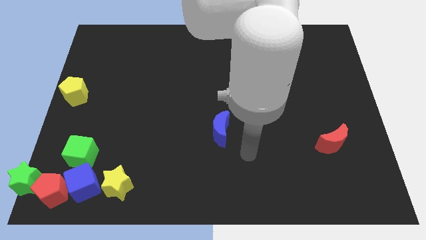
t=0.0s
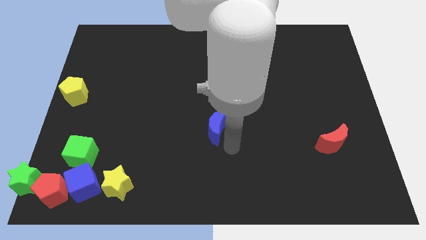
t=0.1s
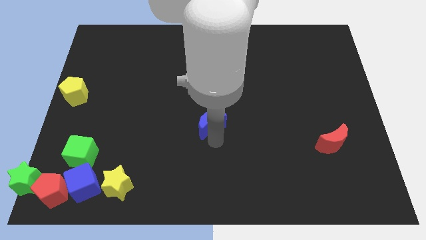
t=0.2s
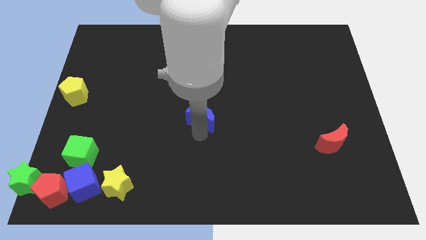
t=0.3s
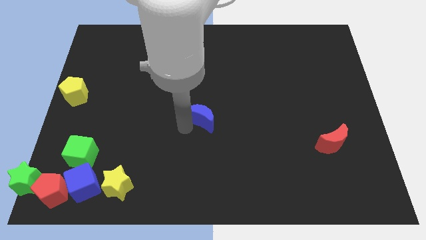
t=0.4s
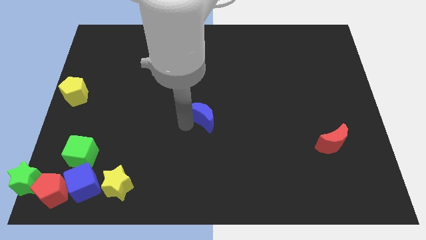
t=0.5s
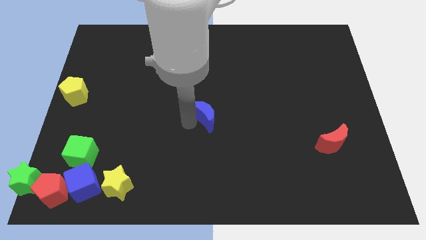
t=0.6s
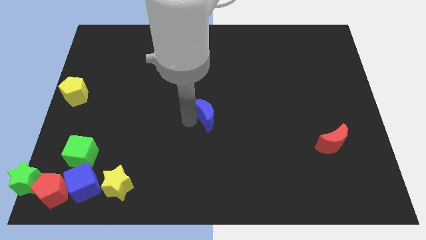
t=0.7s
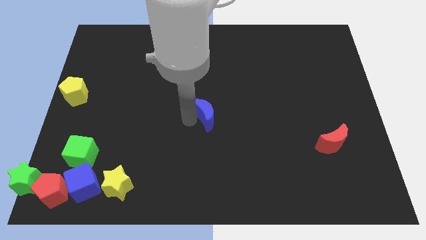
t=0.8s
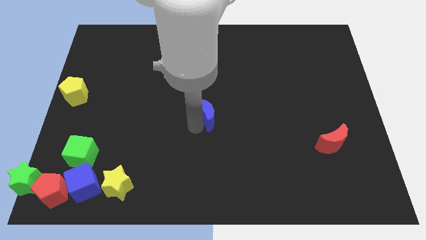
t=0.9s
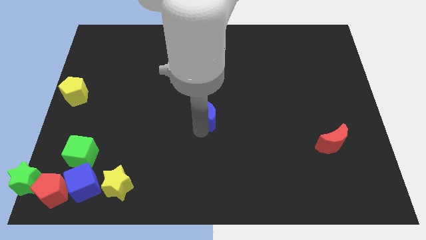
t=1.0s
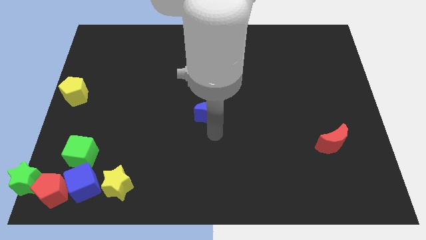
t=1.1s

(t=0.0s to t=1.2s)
slide the blue crescent towards the center of the board

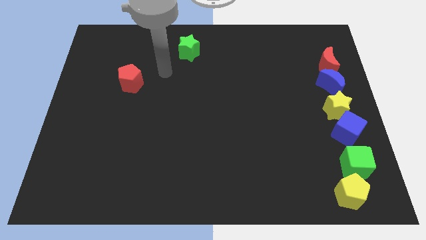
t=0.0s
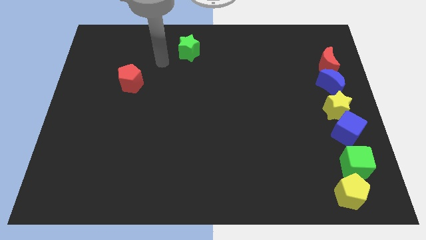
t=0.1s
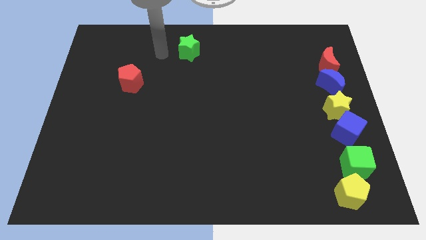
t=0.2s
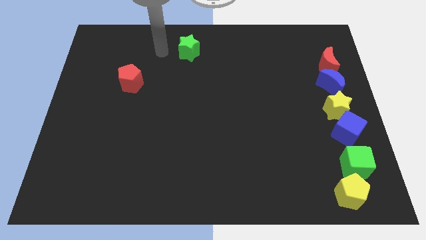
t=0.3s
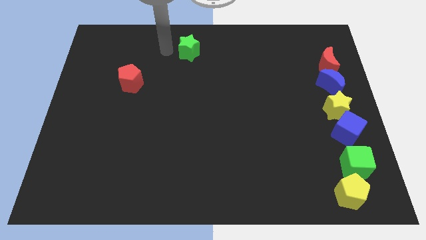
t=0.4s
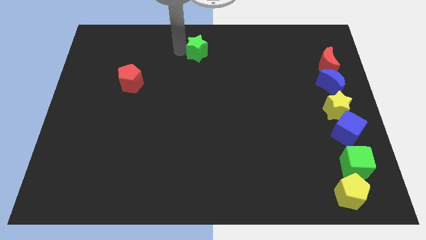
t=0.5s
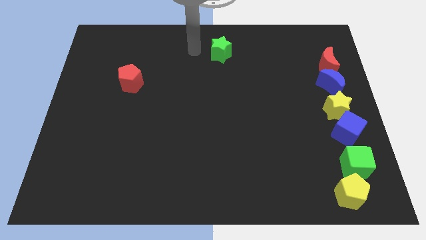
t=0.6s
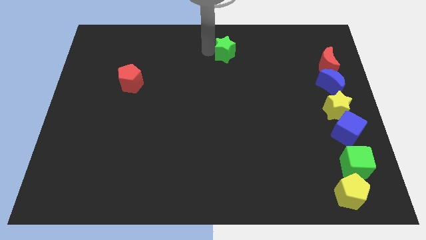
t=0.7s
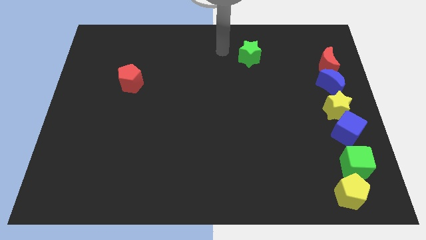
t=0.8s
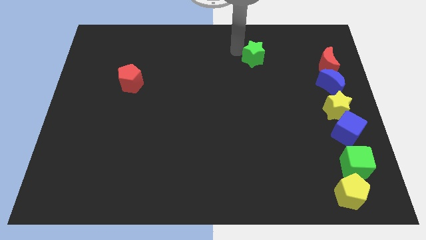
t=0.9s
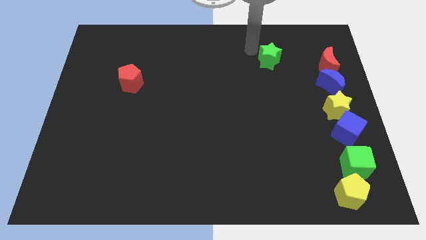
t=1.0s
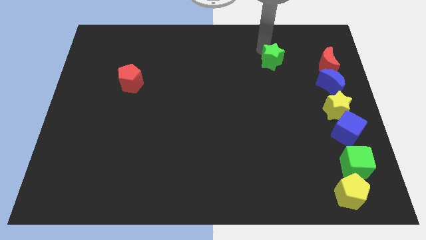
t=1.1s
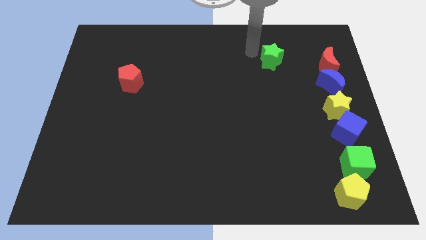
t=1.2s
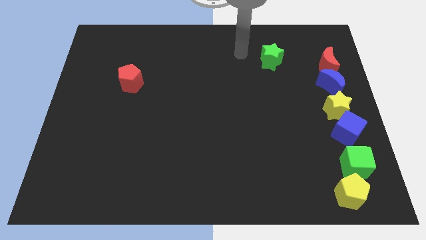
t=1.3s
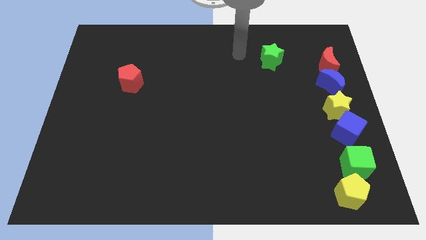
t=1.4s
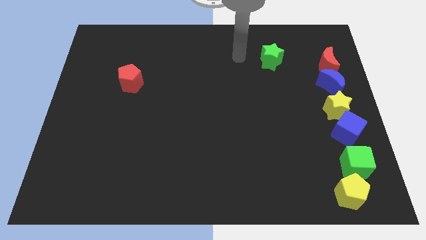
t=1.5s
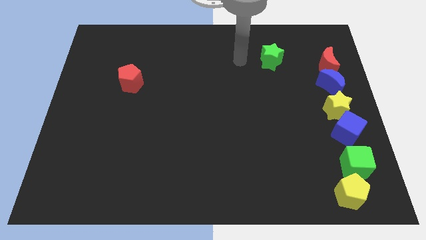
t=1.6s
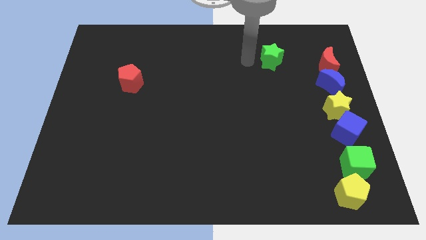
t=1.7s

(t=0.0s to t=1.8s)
push the green star left to the red crescent towards top right on the board

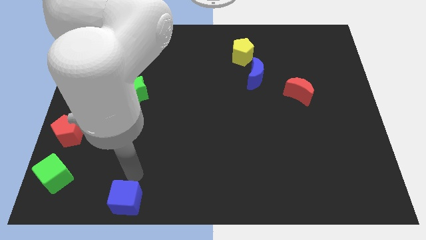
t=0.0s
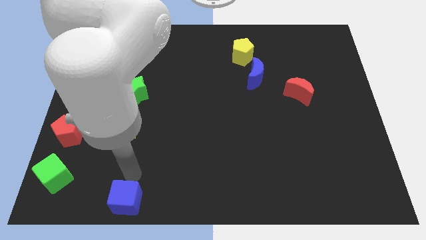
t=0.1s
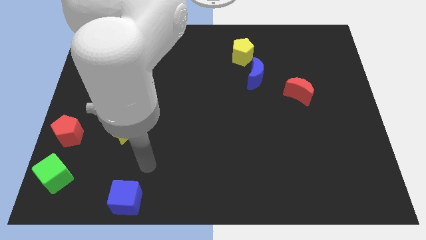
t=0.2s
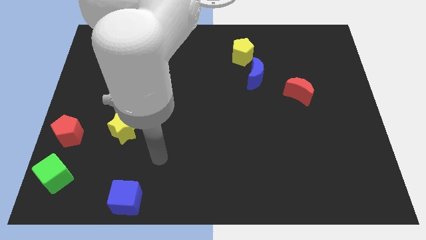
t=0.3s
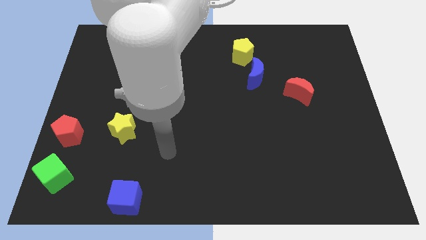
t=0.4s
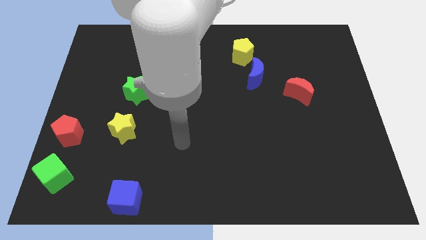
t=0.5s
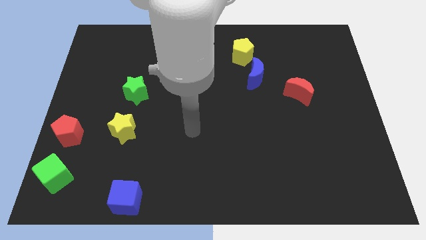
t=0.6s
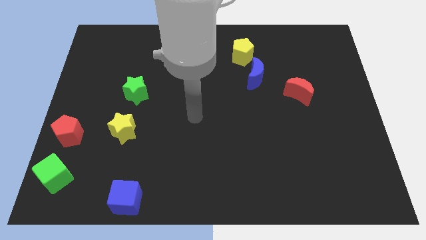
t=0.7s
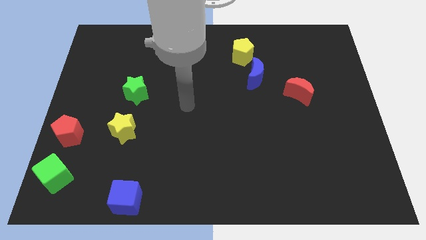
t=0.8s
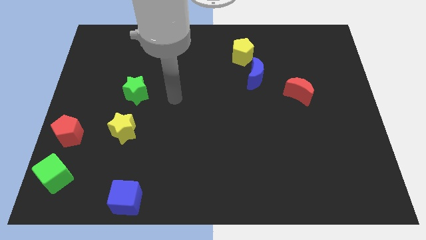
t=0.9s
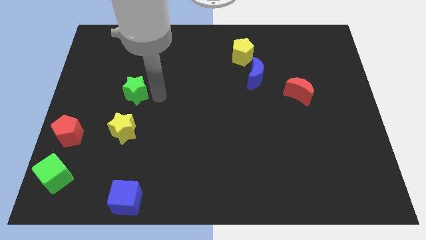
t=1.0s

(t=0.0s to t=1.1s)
point your arm at the right of the green star

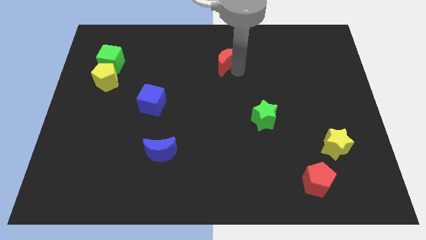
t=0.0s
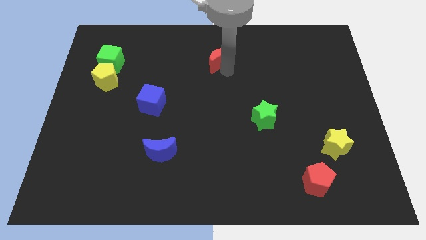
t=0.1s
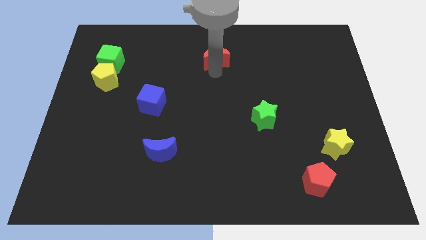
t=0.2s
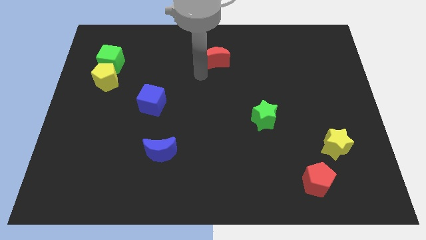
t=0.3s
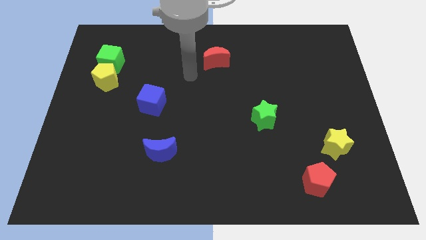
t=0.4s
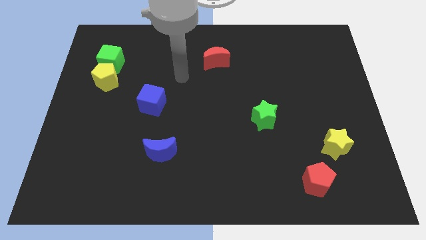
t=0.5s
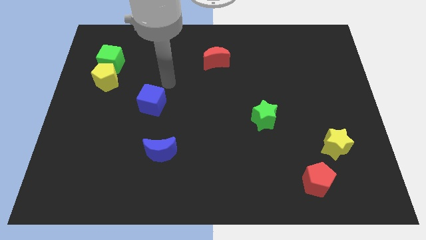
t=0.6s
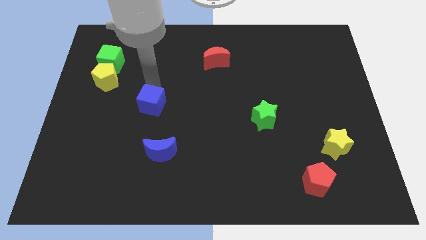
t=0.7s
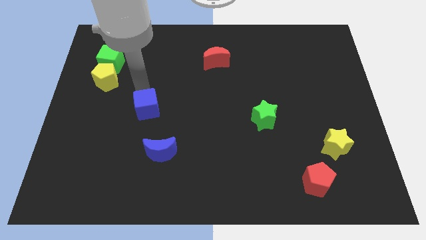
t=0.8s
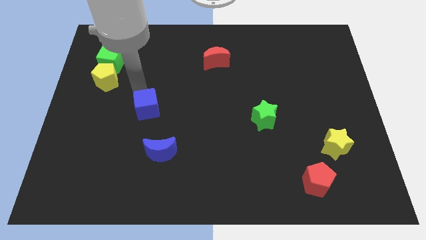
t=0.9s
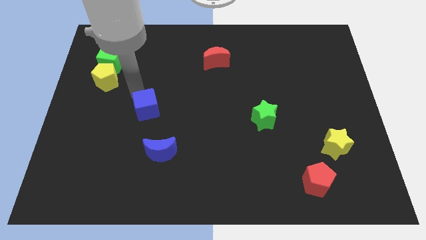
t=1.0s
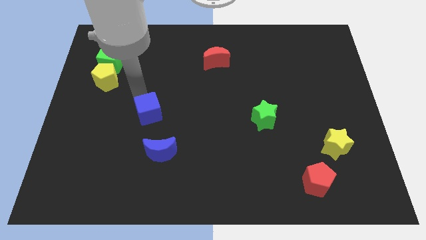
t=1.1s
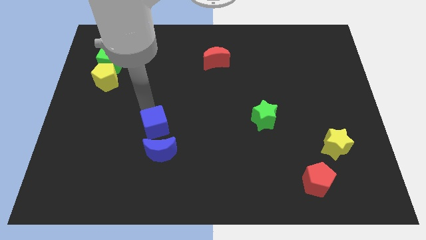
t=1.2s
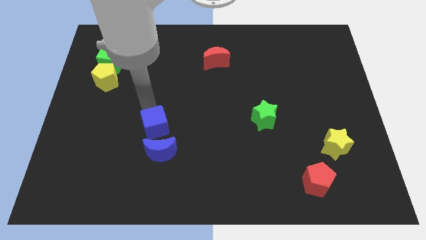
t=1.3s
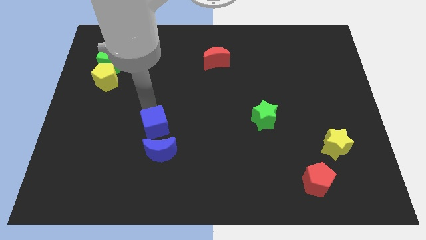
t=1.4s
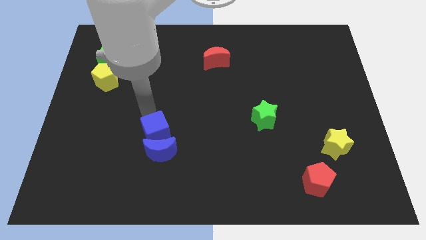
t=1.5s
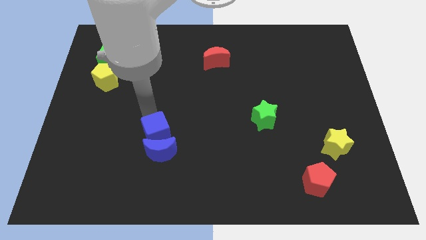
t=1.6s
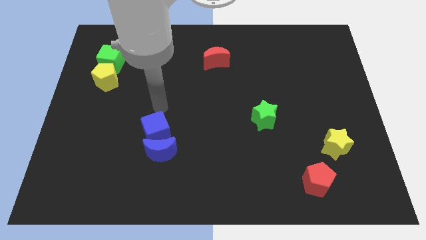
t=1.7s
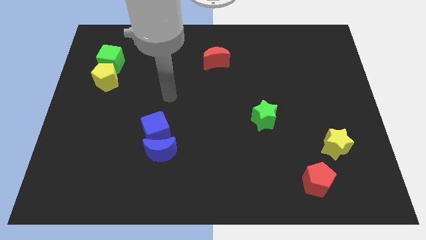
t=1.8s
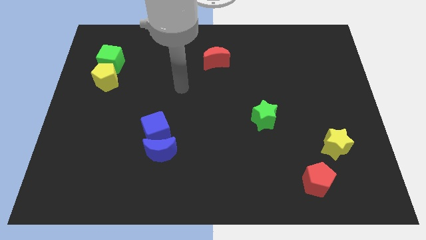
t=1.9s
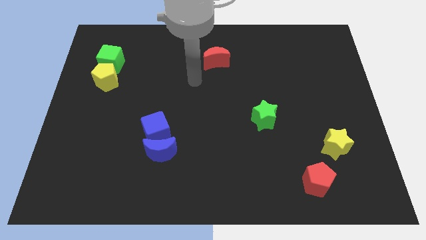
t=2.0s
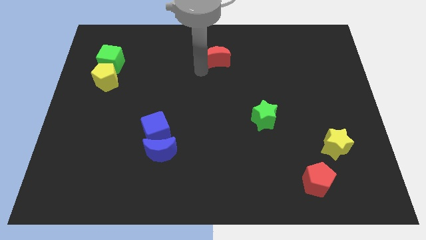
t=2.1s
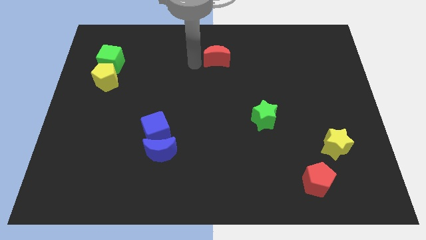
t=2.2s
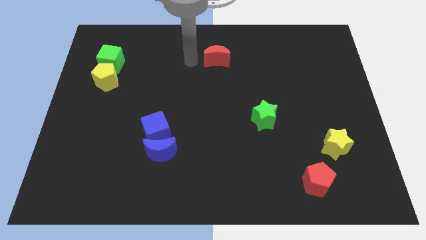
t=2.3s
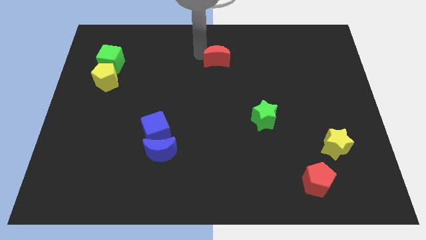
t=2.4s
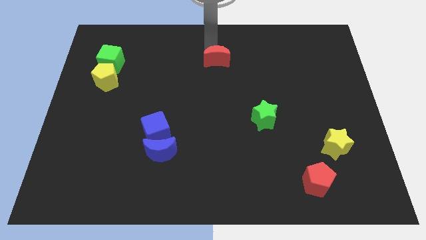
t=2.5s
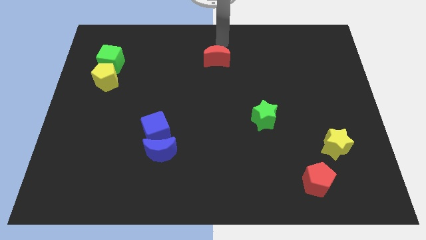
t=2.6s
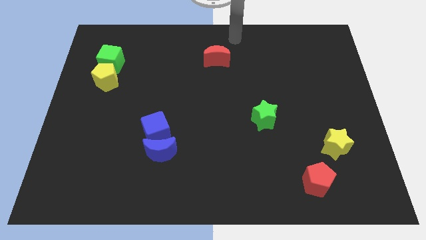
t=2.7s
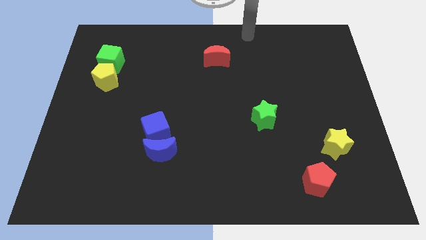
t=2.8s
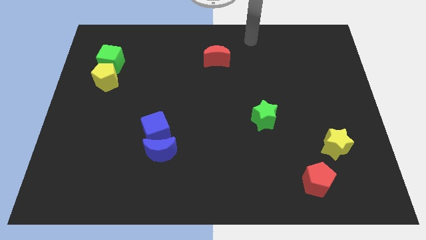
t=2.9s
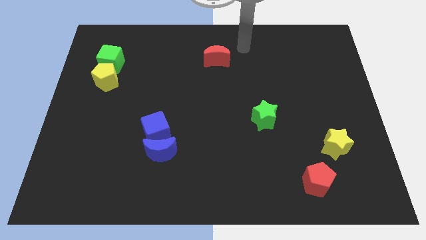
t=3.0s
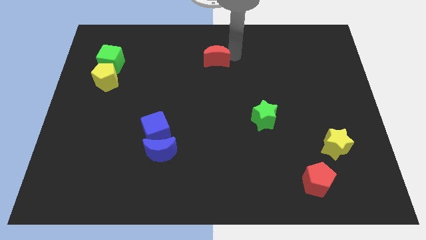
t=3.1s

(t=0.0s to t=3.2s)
move the blue cube into the blue crescent

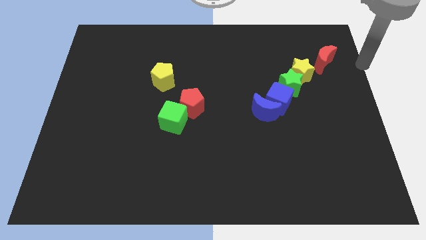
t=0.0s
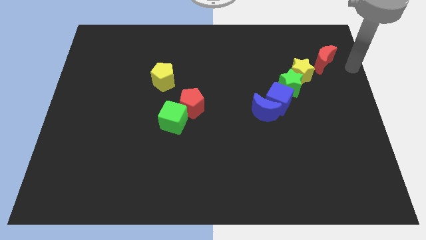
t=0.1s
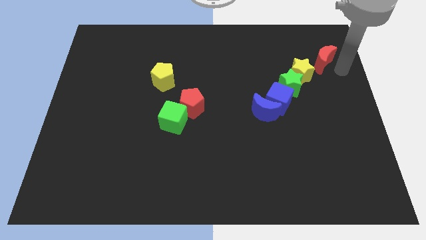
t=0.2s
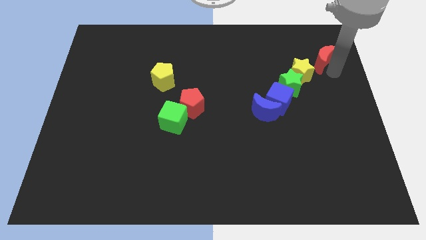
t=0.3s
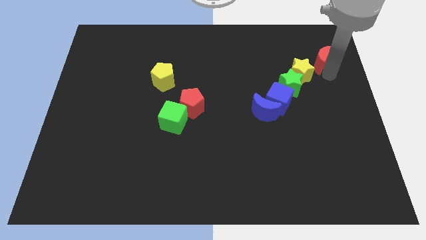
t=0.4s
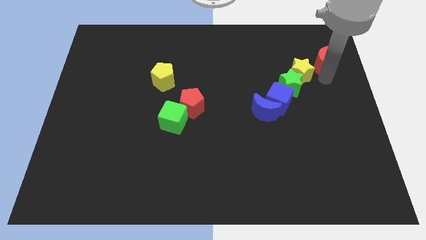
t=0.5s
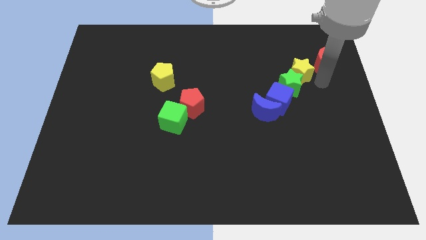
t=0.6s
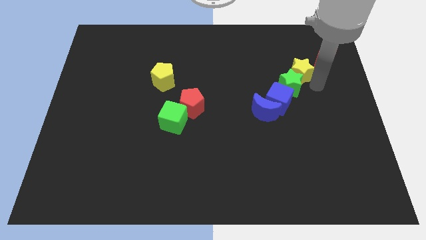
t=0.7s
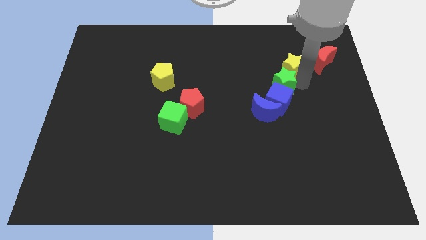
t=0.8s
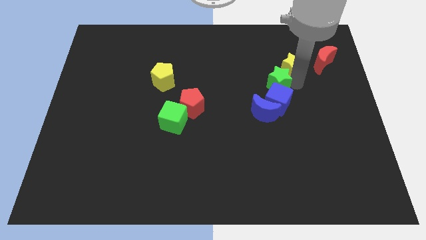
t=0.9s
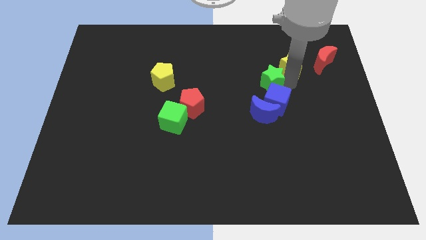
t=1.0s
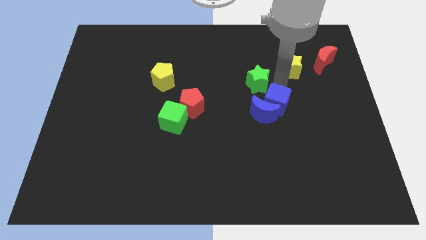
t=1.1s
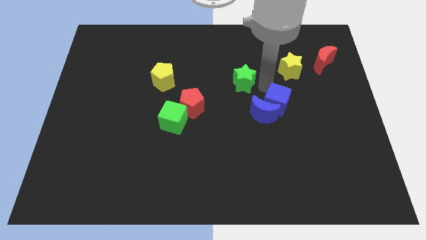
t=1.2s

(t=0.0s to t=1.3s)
separate the green star from the yellow star and blue cube

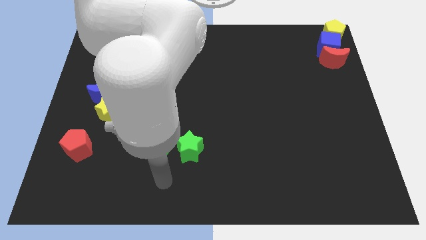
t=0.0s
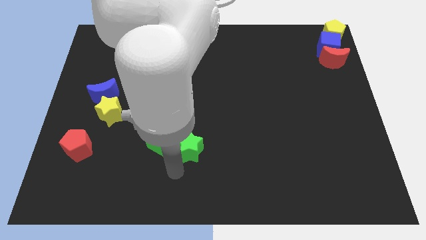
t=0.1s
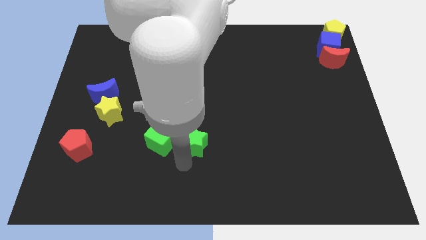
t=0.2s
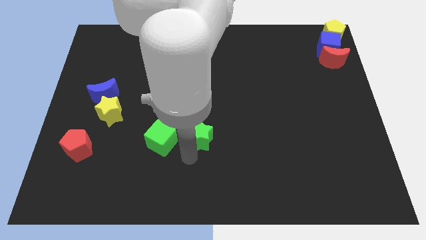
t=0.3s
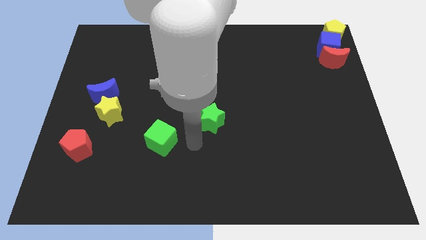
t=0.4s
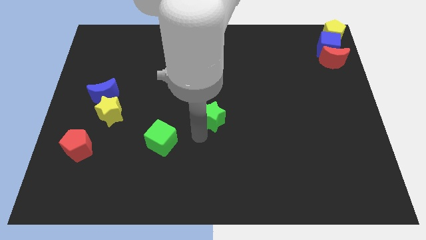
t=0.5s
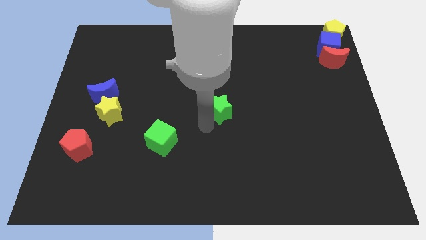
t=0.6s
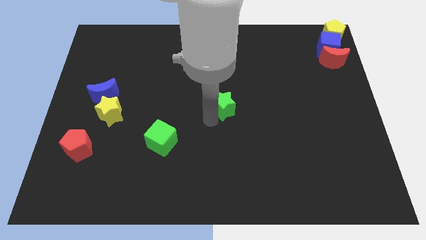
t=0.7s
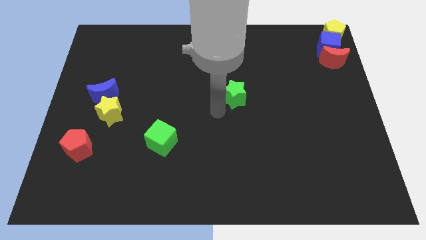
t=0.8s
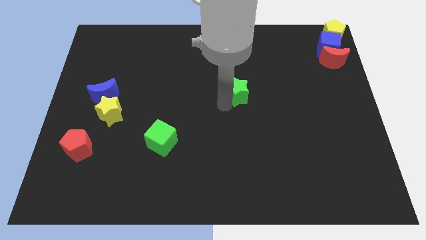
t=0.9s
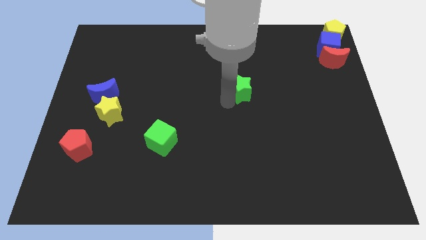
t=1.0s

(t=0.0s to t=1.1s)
separate green star from green cube
